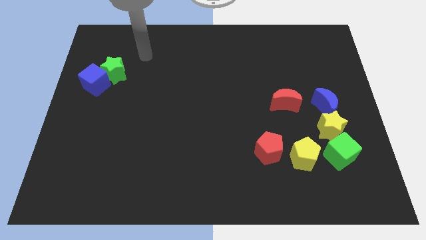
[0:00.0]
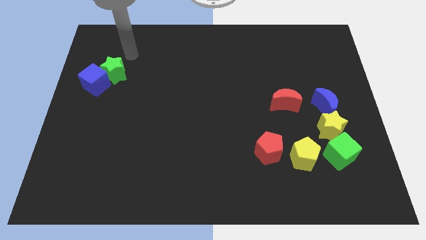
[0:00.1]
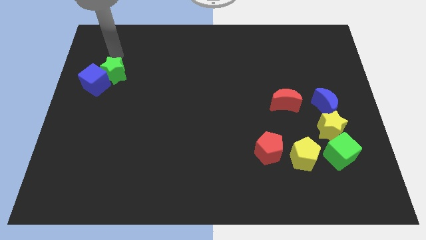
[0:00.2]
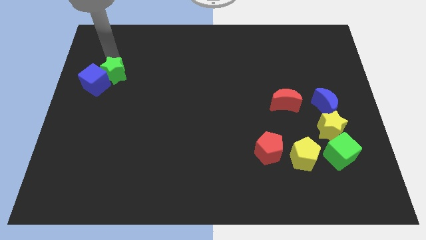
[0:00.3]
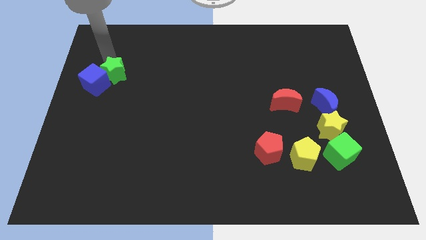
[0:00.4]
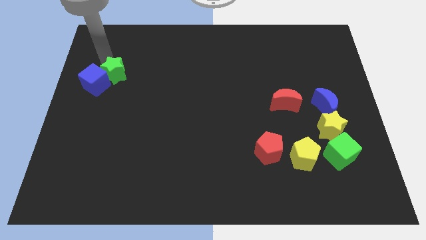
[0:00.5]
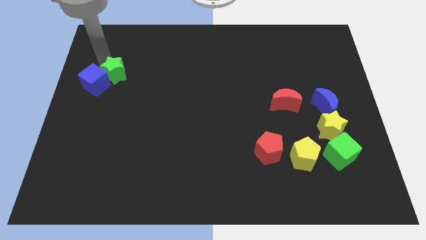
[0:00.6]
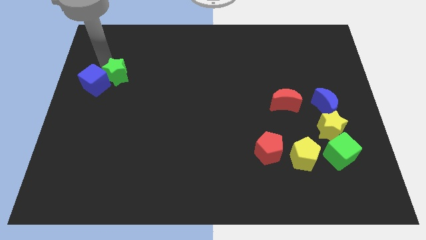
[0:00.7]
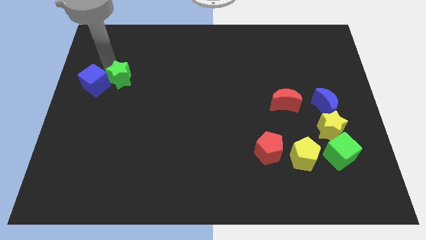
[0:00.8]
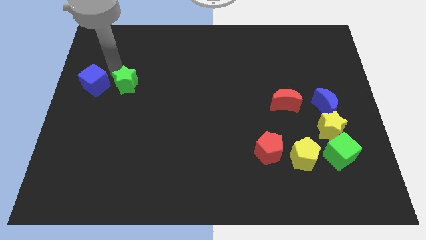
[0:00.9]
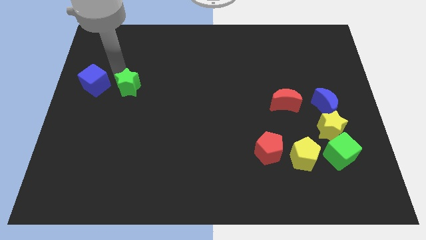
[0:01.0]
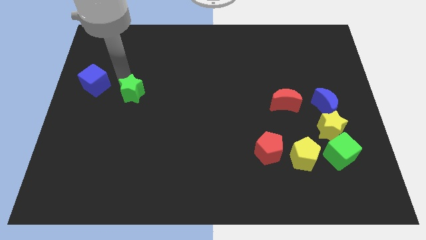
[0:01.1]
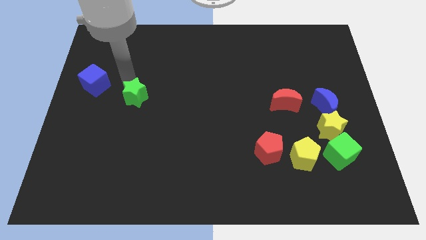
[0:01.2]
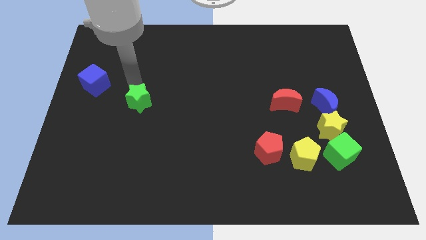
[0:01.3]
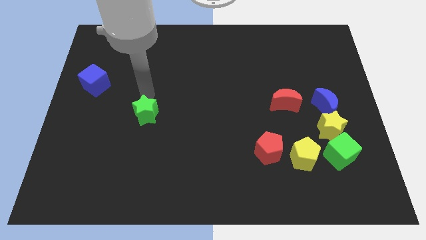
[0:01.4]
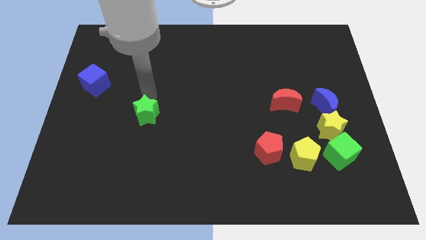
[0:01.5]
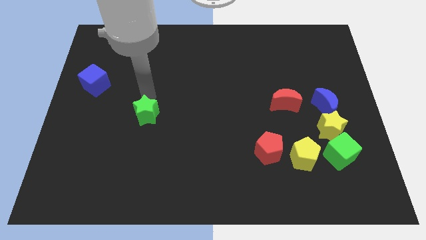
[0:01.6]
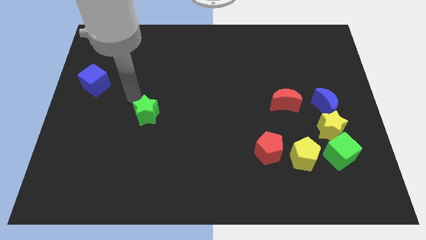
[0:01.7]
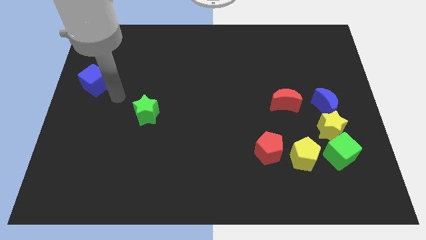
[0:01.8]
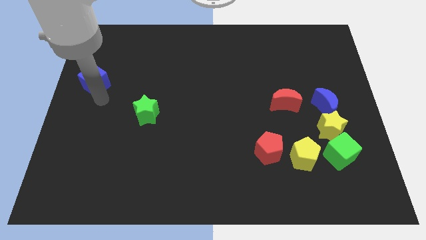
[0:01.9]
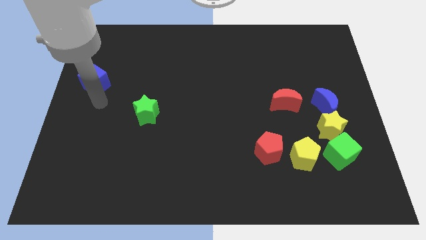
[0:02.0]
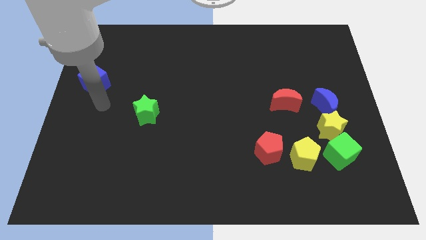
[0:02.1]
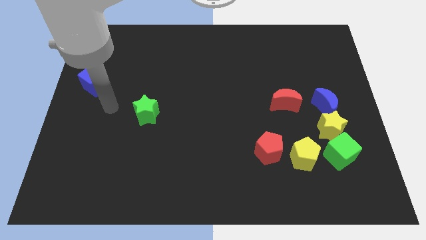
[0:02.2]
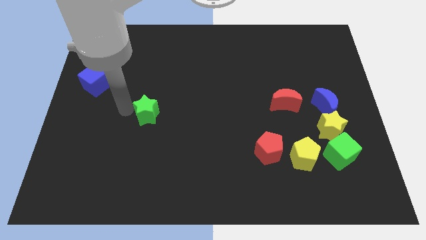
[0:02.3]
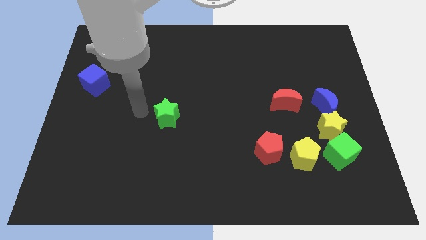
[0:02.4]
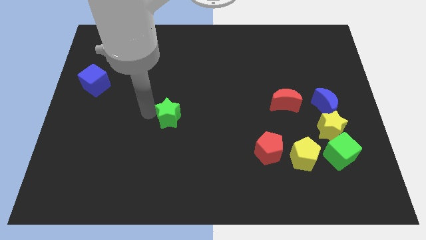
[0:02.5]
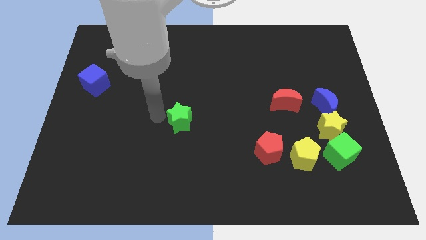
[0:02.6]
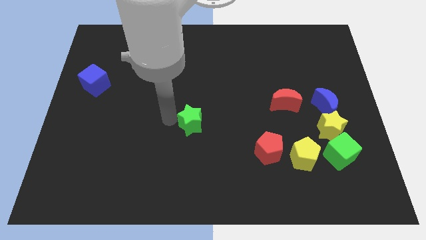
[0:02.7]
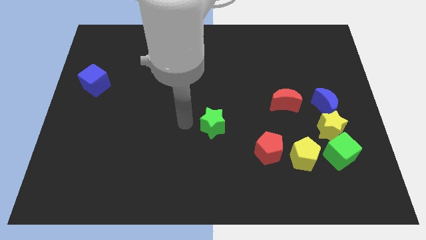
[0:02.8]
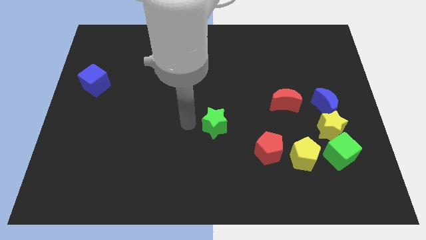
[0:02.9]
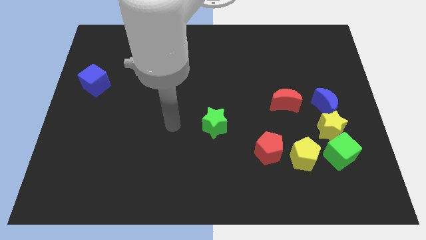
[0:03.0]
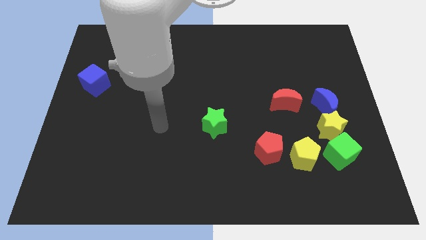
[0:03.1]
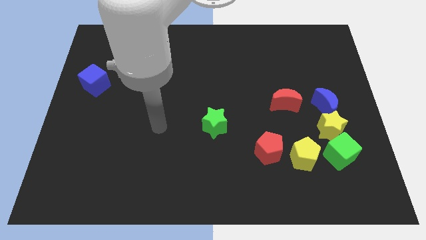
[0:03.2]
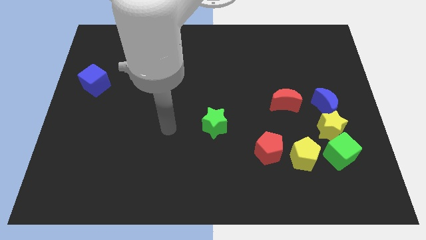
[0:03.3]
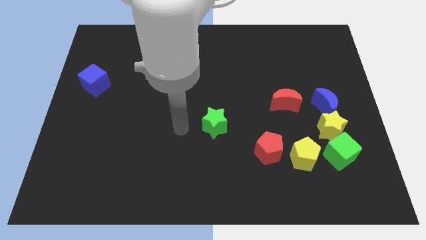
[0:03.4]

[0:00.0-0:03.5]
move the green star to the right

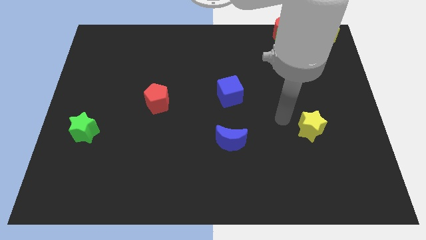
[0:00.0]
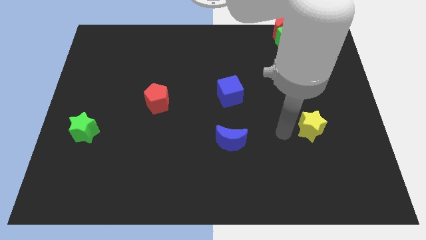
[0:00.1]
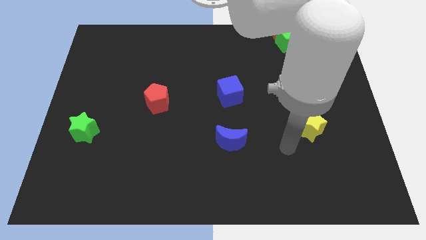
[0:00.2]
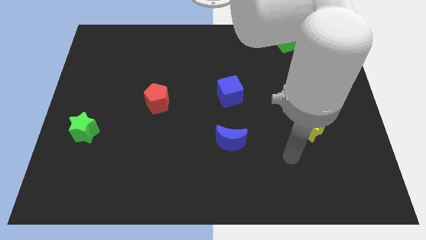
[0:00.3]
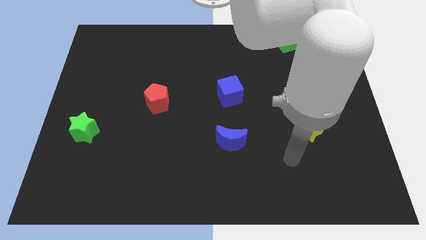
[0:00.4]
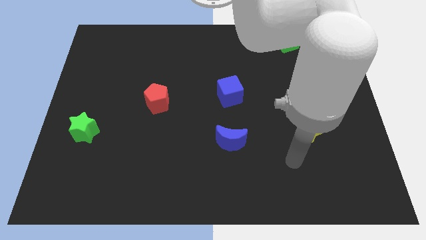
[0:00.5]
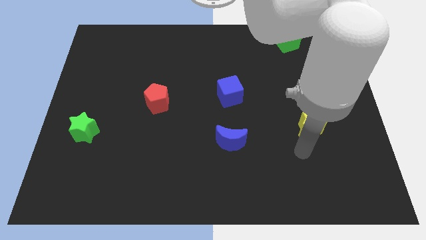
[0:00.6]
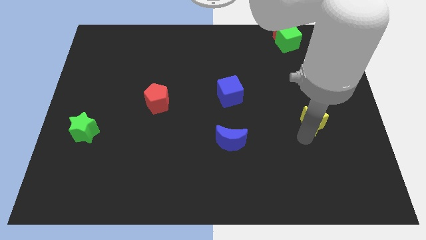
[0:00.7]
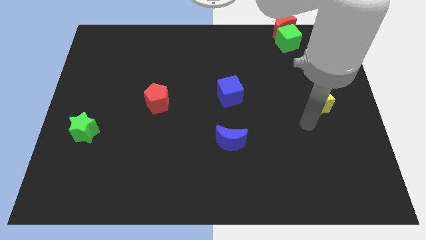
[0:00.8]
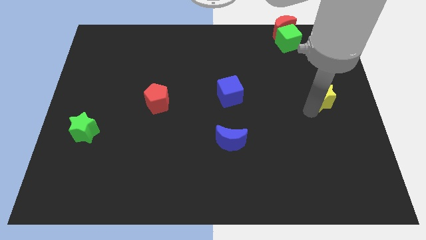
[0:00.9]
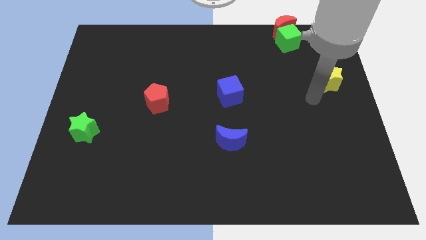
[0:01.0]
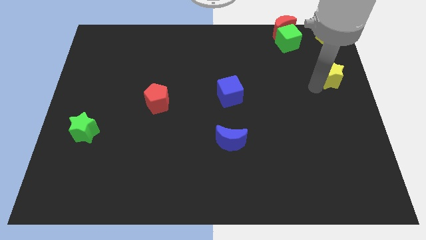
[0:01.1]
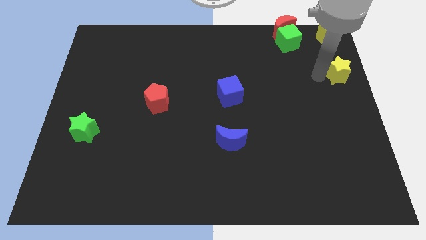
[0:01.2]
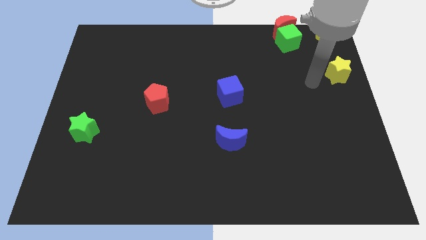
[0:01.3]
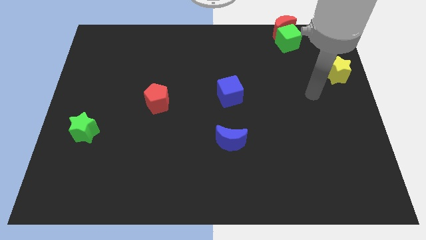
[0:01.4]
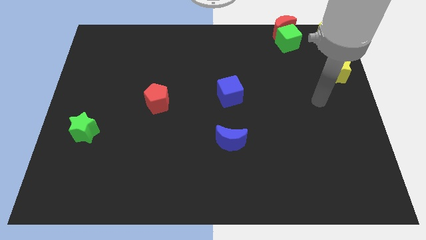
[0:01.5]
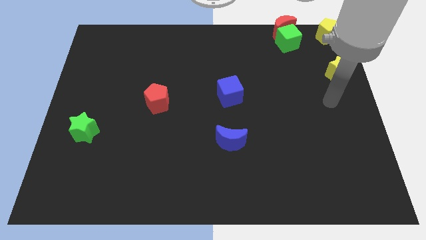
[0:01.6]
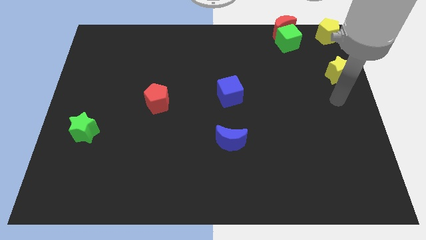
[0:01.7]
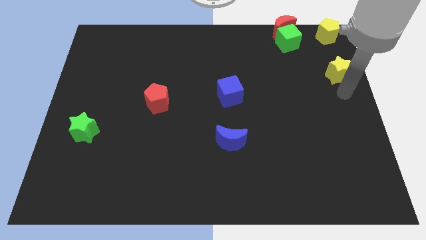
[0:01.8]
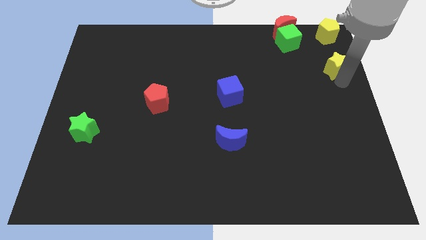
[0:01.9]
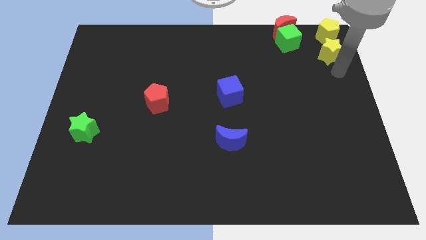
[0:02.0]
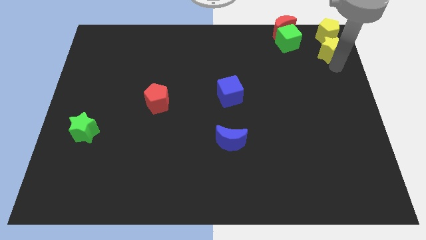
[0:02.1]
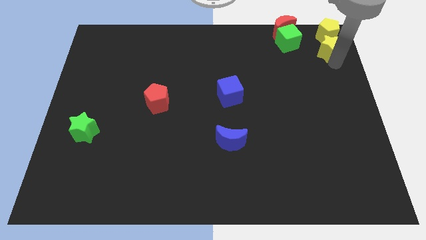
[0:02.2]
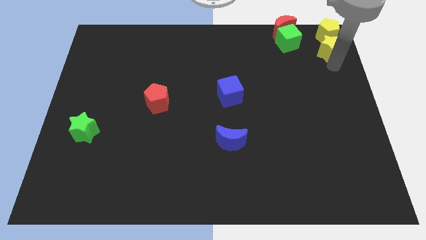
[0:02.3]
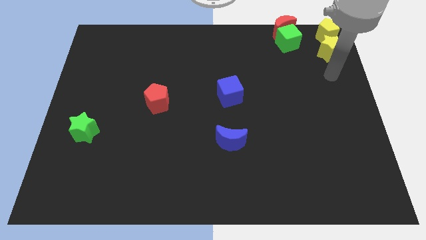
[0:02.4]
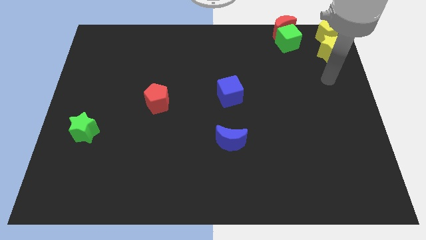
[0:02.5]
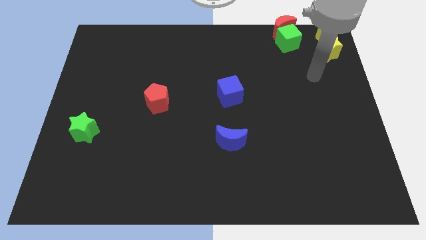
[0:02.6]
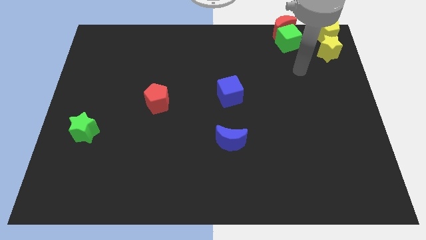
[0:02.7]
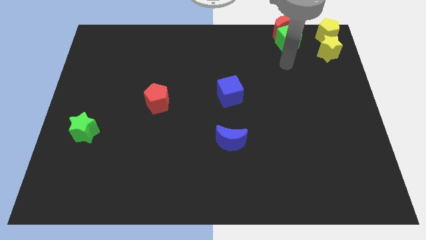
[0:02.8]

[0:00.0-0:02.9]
move yellow star into the bottom of the yellow pentagon

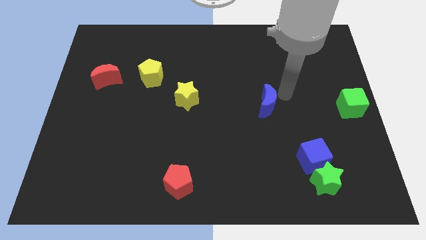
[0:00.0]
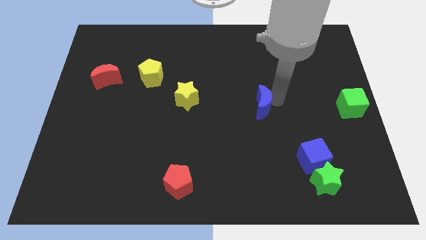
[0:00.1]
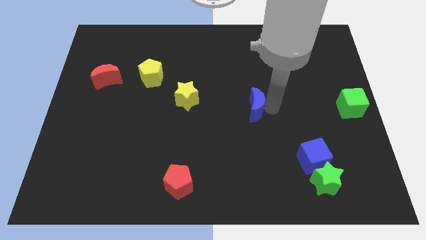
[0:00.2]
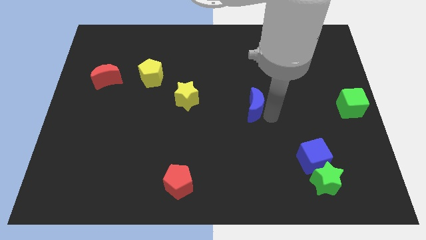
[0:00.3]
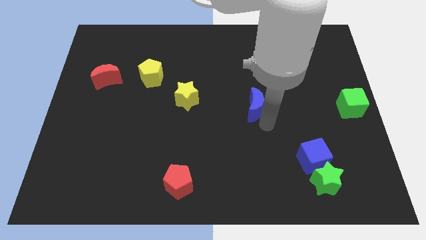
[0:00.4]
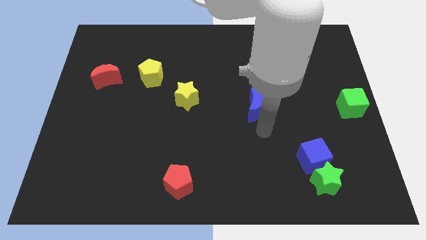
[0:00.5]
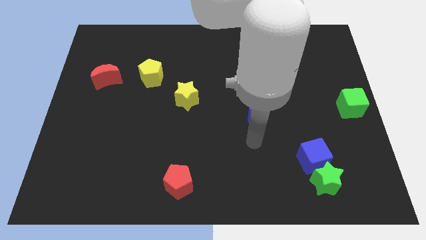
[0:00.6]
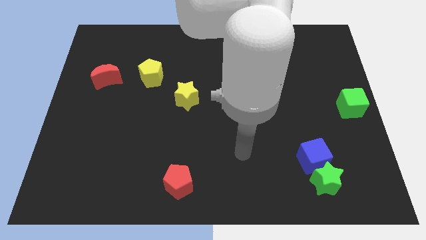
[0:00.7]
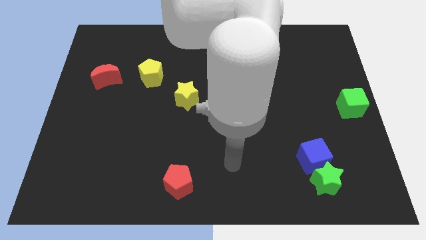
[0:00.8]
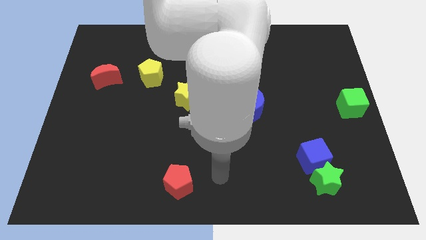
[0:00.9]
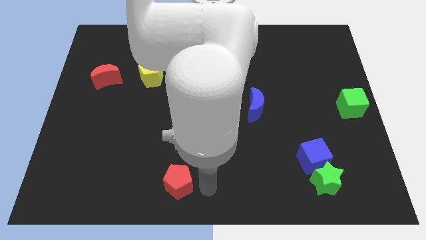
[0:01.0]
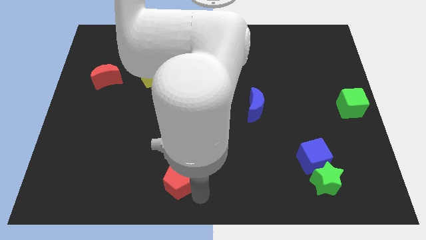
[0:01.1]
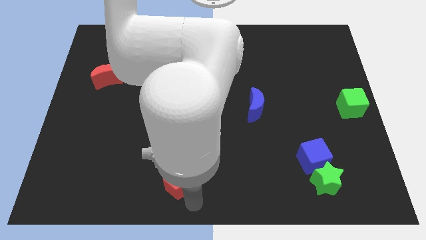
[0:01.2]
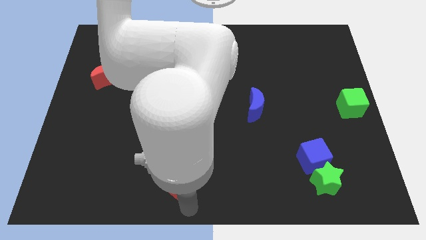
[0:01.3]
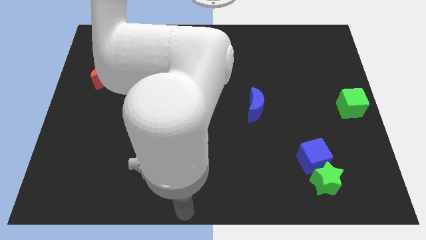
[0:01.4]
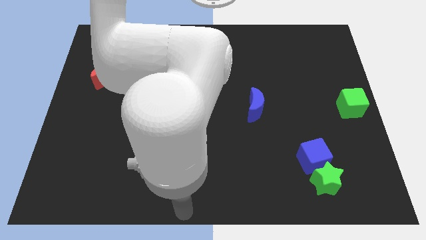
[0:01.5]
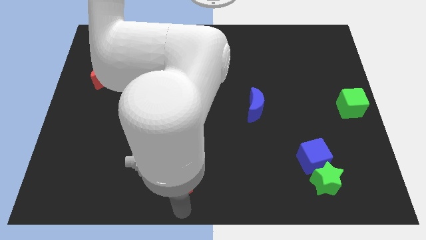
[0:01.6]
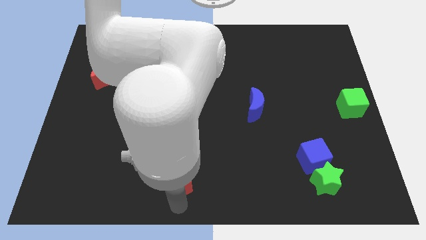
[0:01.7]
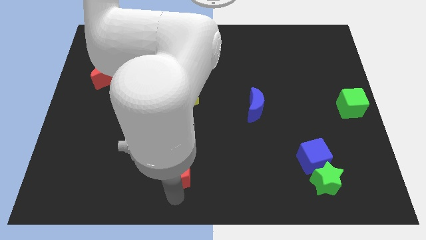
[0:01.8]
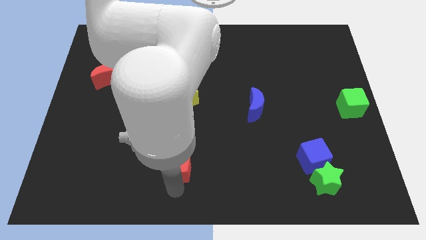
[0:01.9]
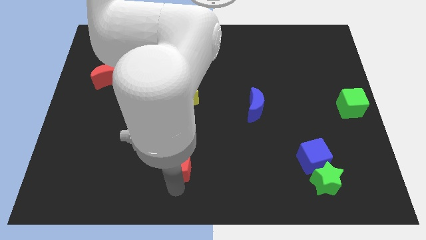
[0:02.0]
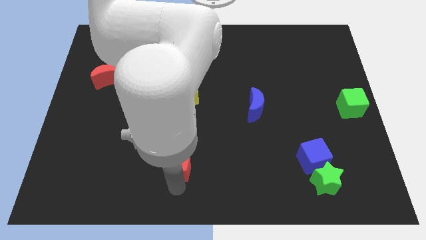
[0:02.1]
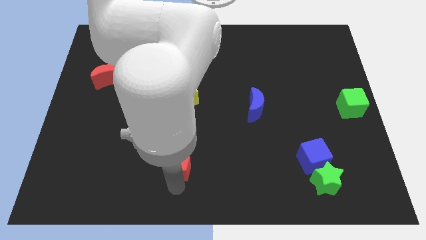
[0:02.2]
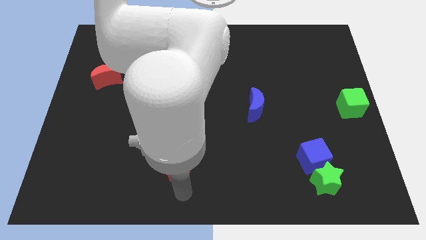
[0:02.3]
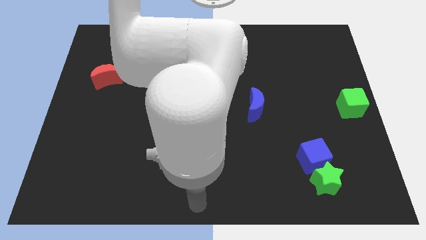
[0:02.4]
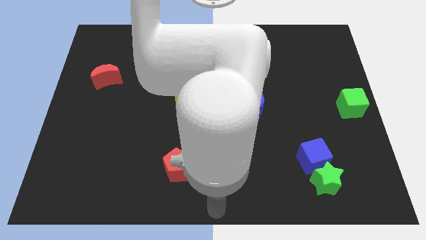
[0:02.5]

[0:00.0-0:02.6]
push red pentagon slightly upwards
